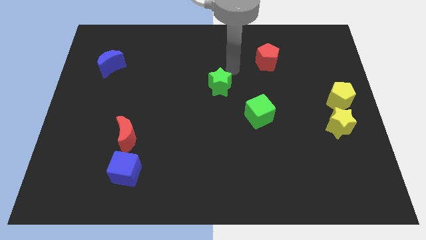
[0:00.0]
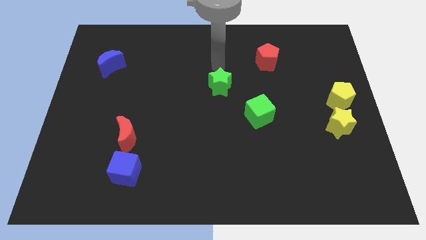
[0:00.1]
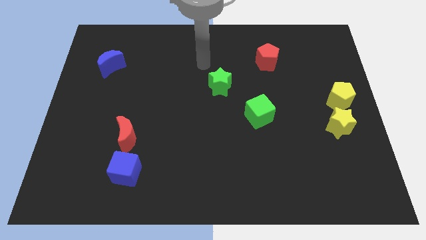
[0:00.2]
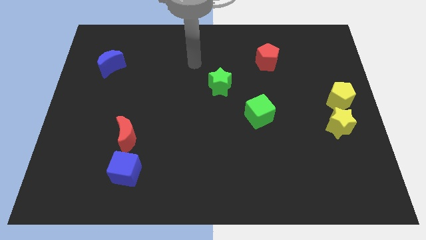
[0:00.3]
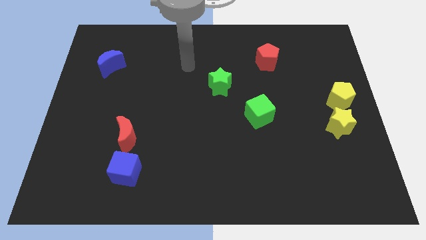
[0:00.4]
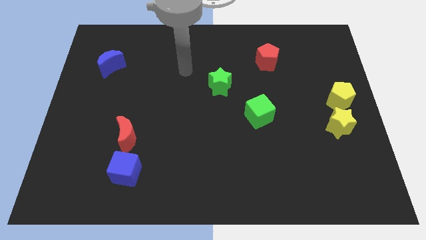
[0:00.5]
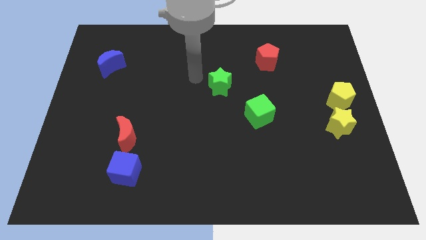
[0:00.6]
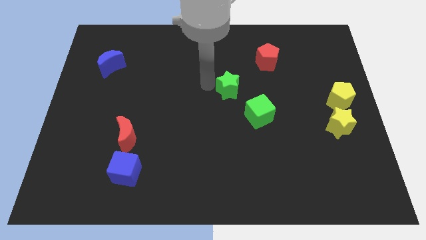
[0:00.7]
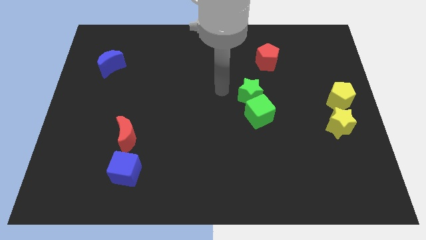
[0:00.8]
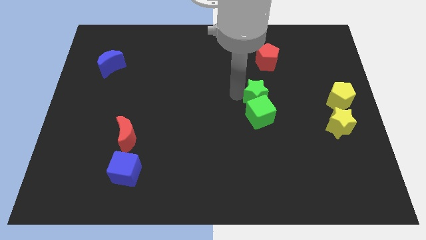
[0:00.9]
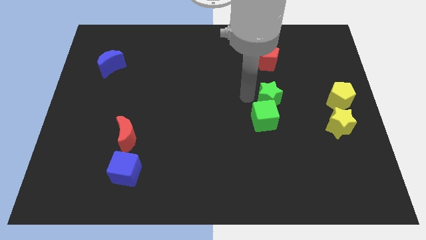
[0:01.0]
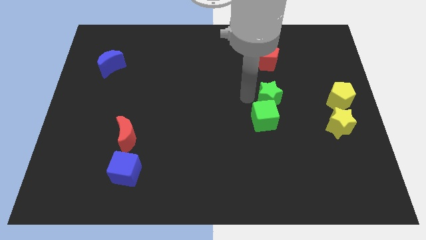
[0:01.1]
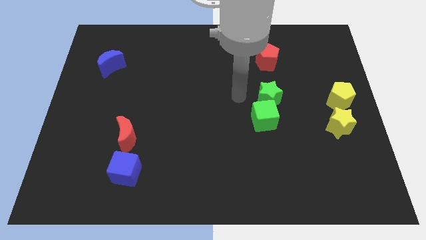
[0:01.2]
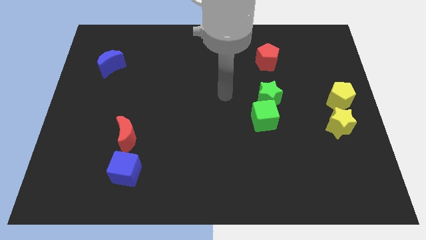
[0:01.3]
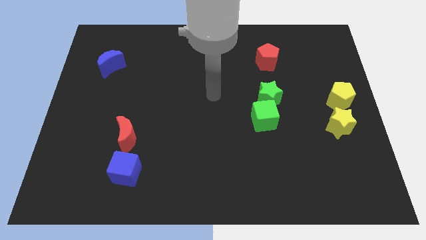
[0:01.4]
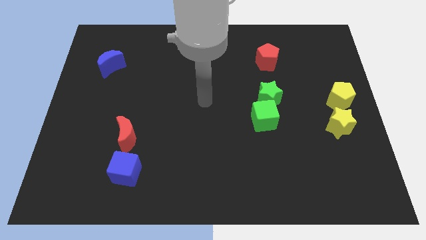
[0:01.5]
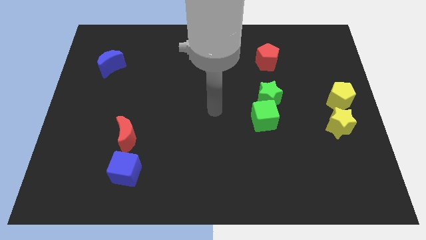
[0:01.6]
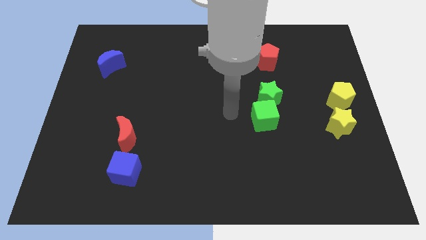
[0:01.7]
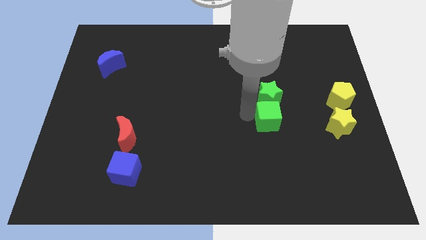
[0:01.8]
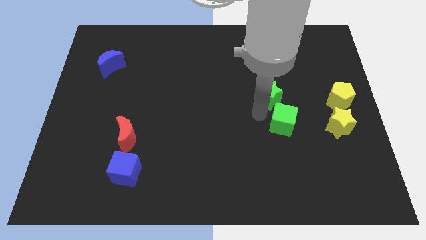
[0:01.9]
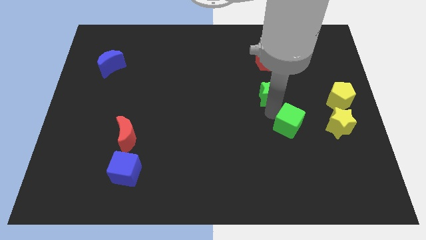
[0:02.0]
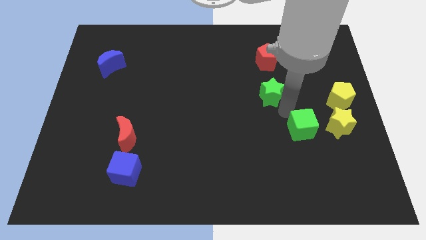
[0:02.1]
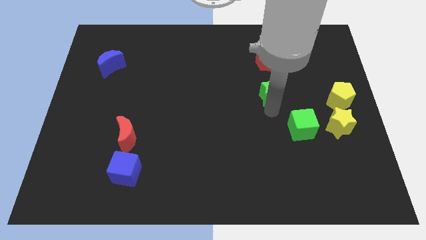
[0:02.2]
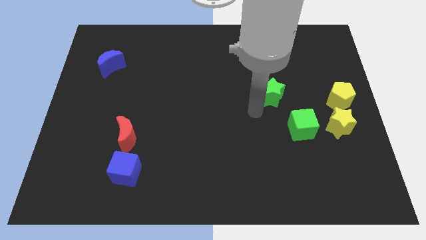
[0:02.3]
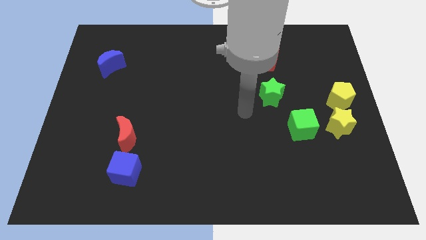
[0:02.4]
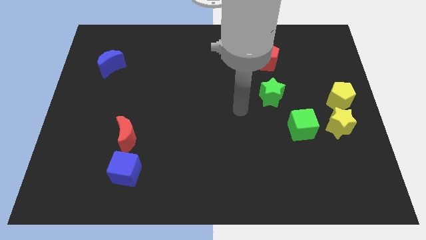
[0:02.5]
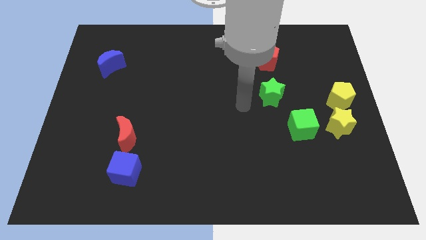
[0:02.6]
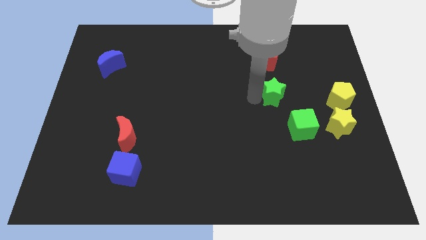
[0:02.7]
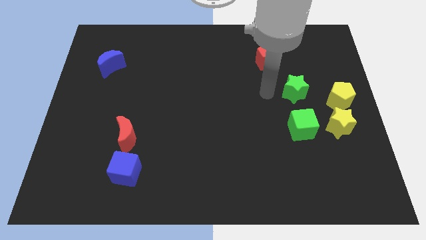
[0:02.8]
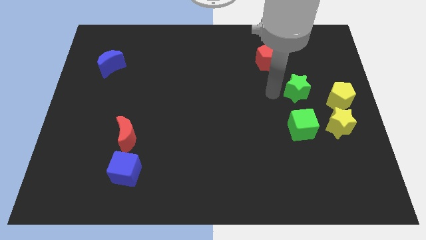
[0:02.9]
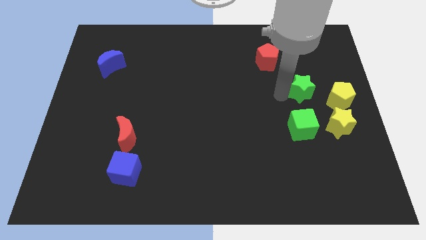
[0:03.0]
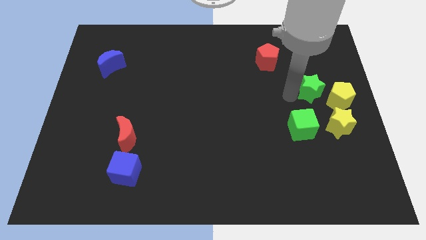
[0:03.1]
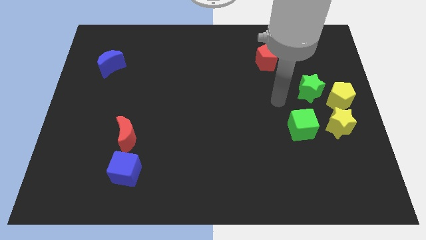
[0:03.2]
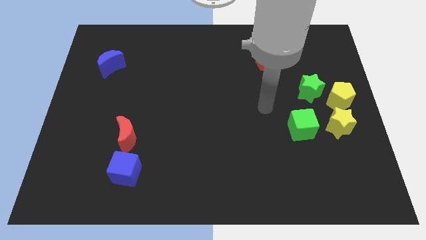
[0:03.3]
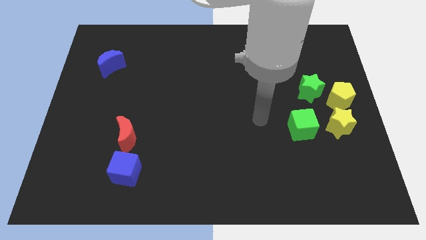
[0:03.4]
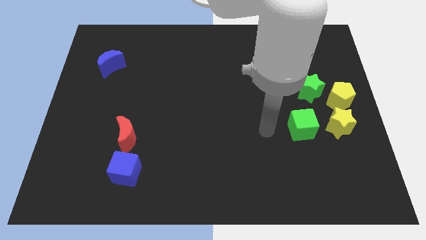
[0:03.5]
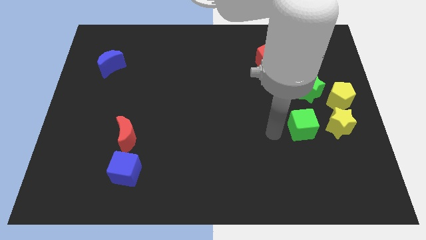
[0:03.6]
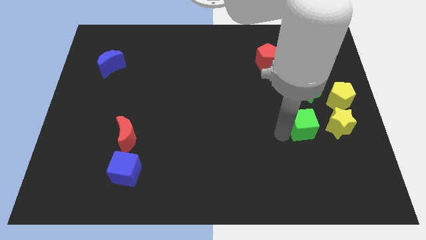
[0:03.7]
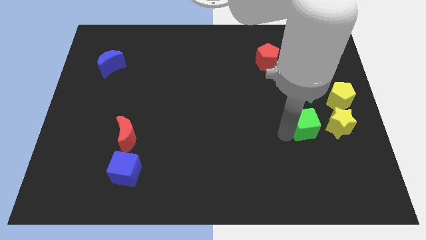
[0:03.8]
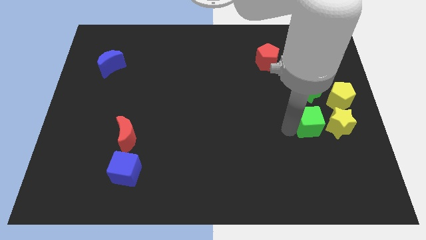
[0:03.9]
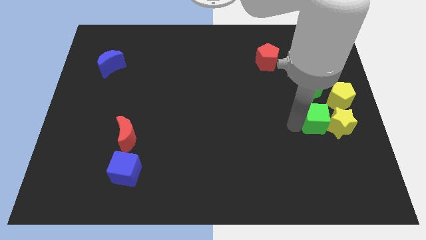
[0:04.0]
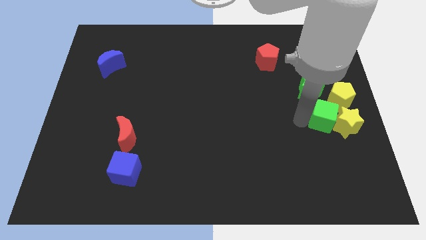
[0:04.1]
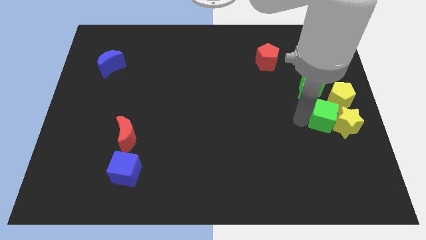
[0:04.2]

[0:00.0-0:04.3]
push the green blocks close to the yellow blocks

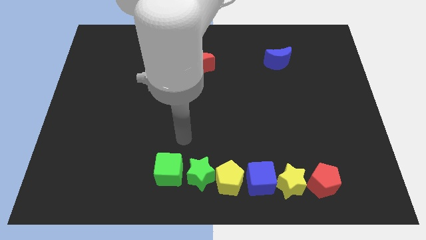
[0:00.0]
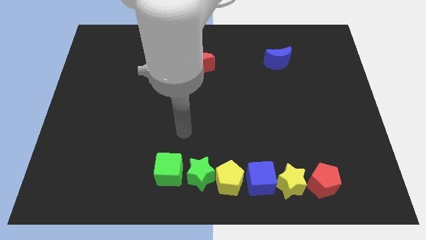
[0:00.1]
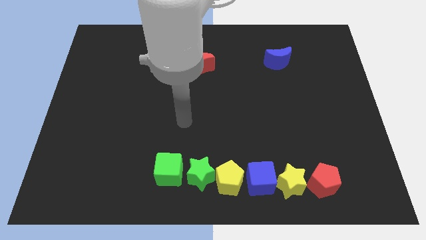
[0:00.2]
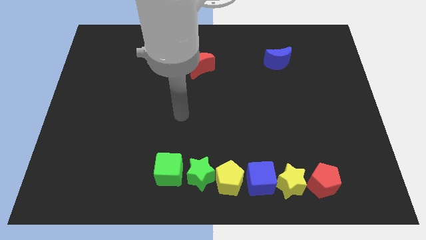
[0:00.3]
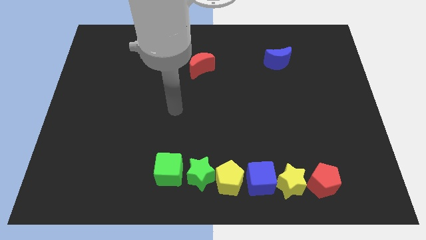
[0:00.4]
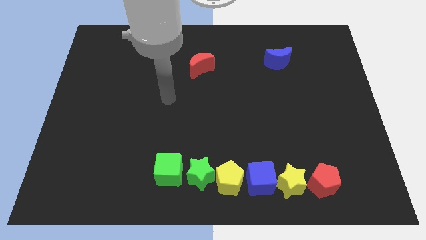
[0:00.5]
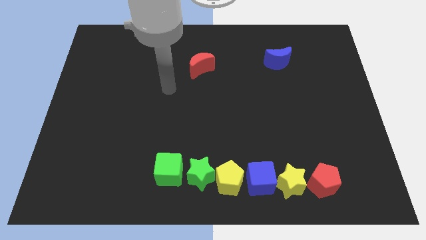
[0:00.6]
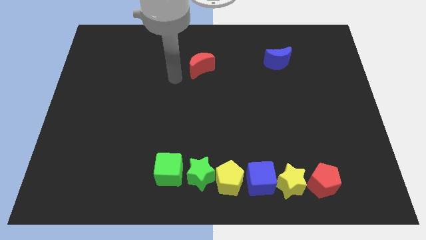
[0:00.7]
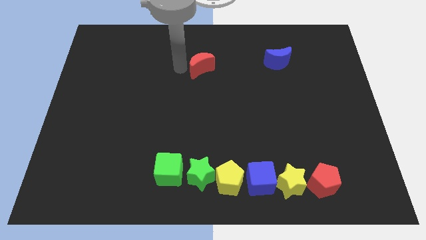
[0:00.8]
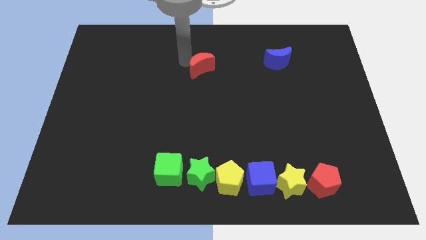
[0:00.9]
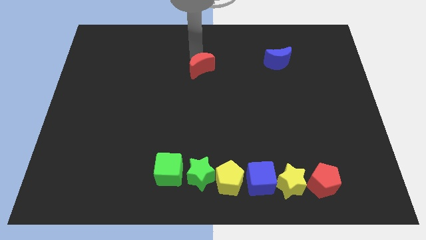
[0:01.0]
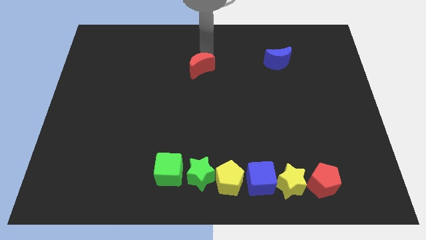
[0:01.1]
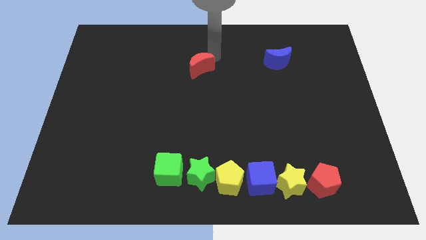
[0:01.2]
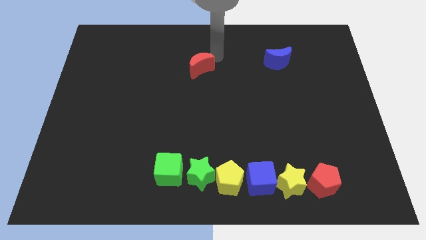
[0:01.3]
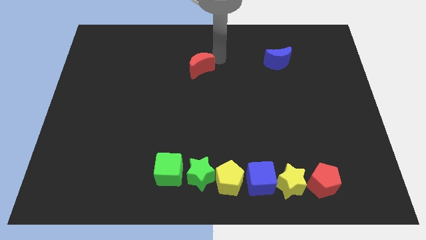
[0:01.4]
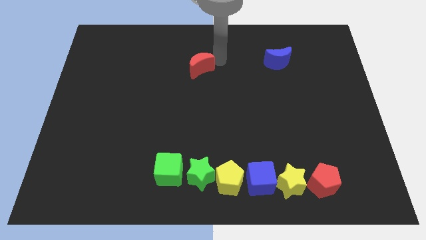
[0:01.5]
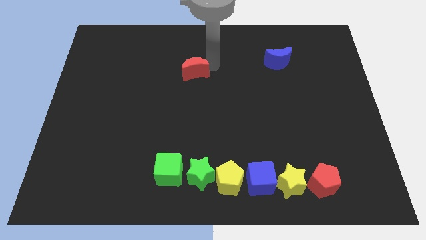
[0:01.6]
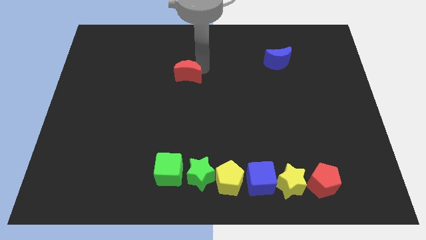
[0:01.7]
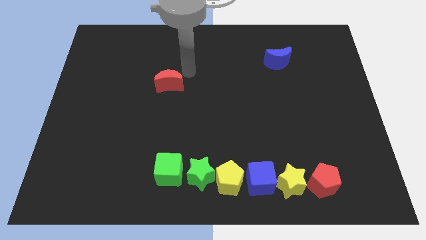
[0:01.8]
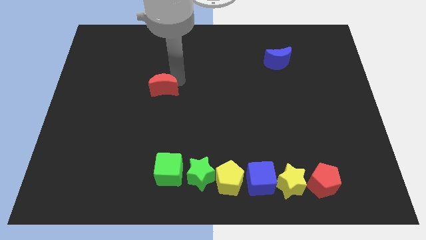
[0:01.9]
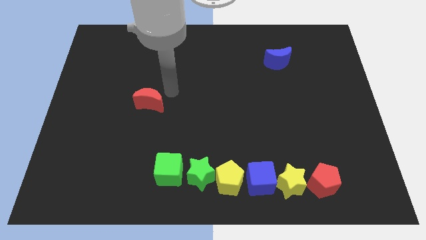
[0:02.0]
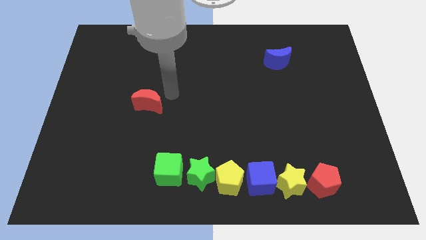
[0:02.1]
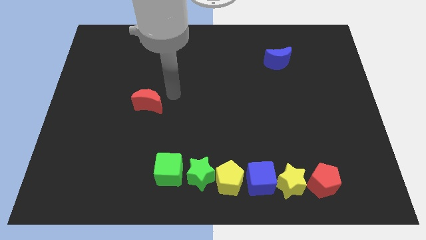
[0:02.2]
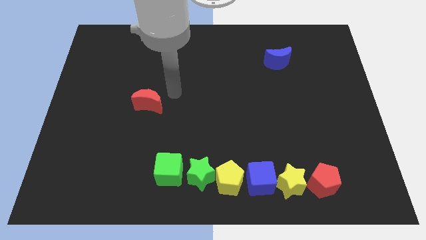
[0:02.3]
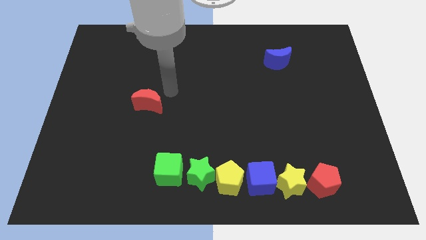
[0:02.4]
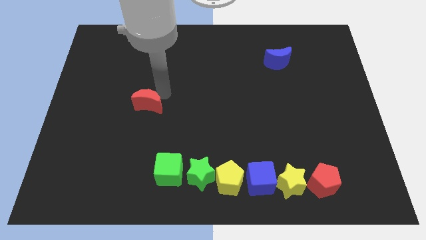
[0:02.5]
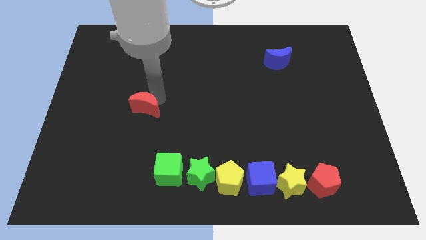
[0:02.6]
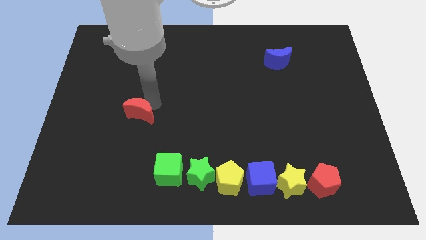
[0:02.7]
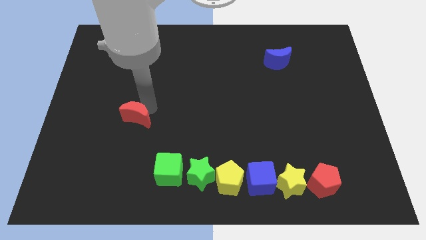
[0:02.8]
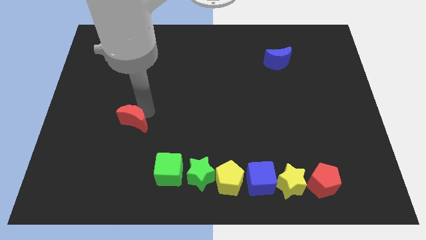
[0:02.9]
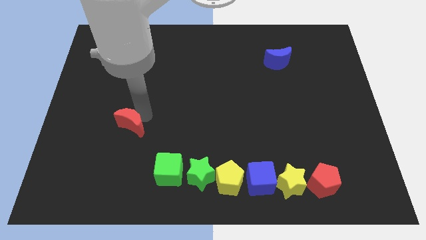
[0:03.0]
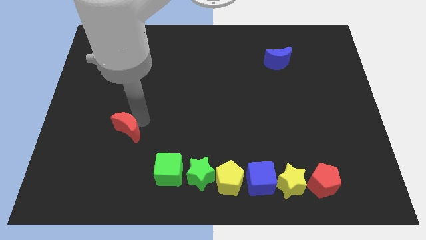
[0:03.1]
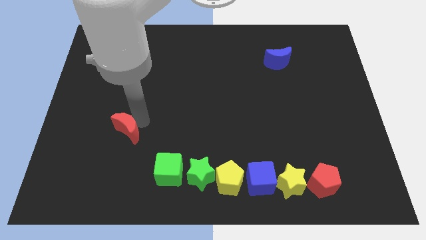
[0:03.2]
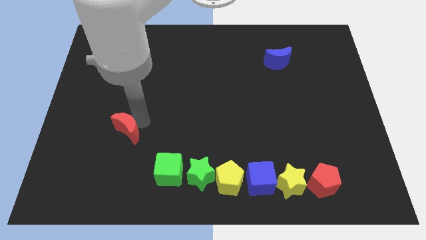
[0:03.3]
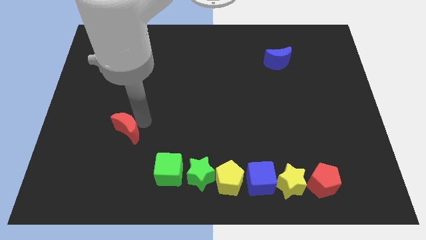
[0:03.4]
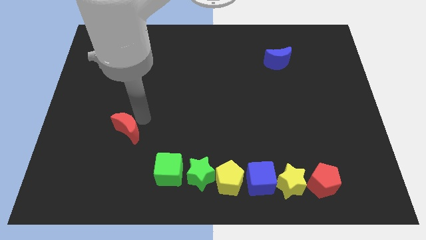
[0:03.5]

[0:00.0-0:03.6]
move the red crescent towards bottom left

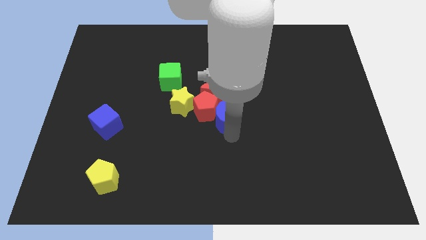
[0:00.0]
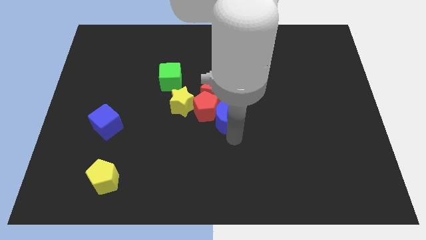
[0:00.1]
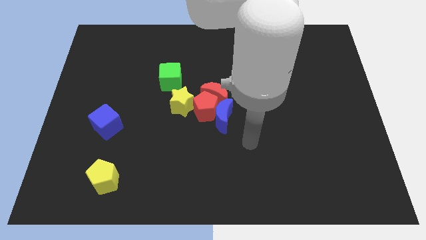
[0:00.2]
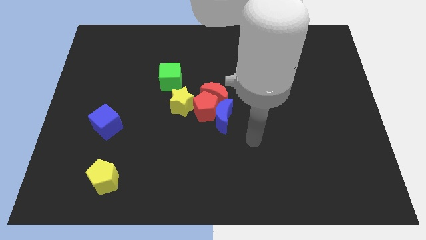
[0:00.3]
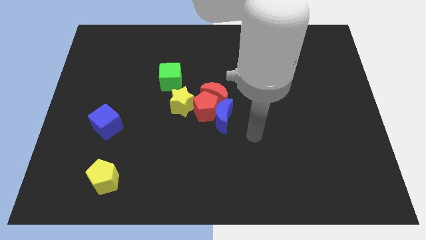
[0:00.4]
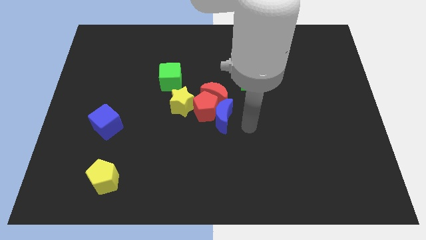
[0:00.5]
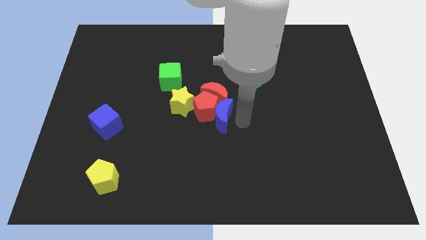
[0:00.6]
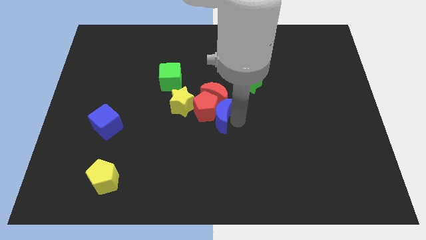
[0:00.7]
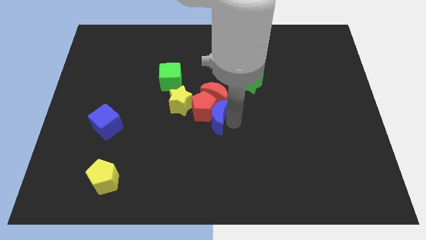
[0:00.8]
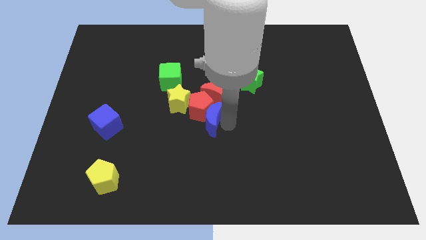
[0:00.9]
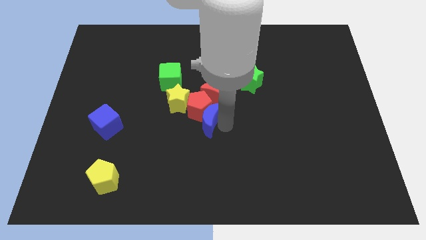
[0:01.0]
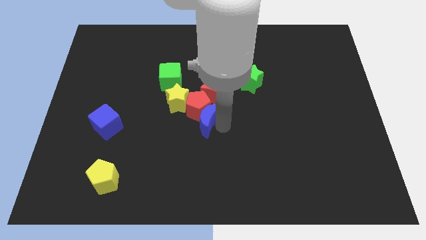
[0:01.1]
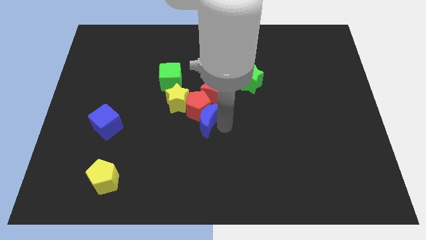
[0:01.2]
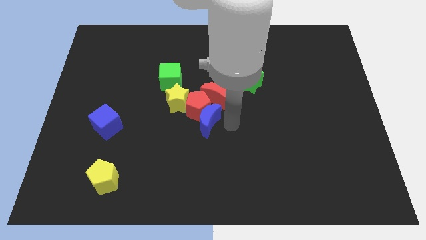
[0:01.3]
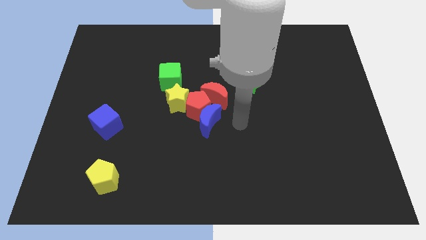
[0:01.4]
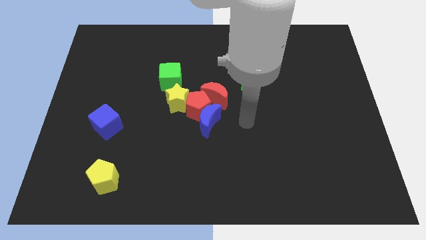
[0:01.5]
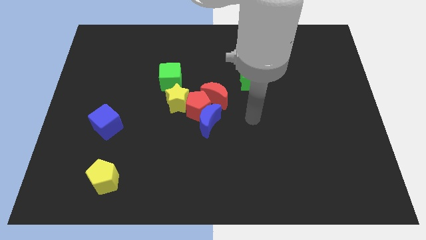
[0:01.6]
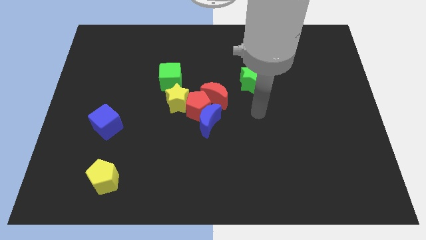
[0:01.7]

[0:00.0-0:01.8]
push red moon into group of blocks
